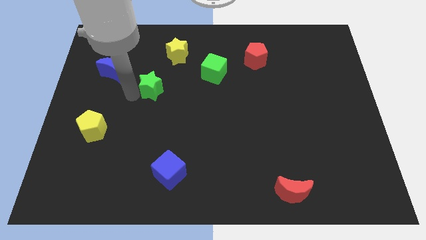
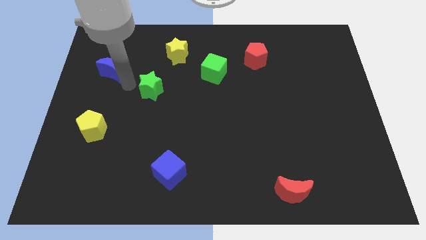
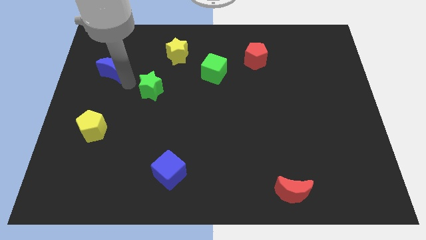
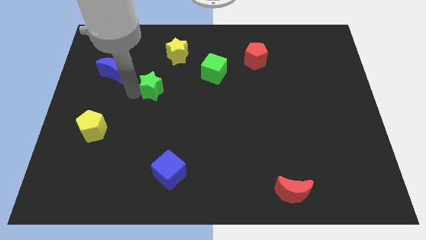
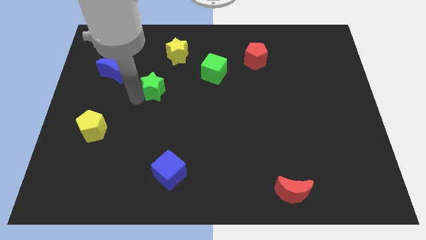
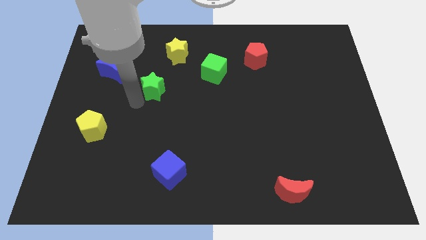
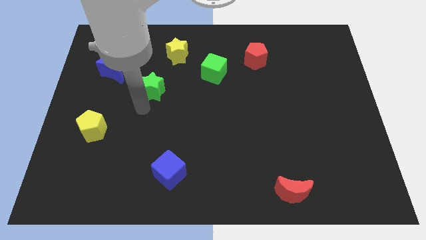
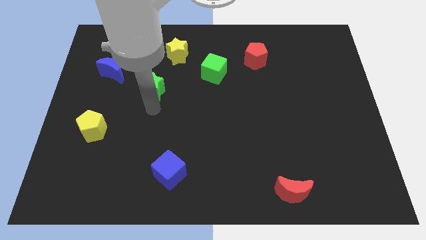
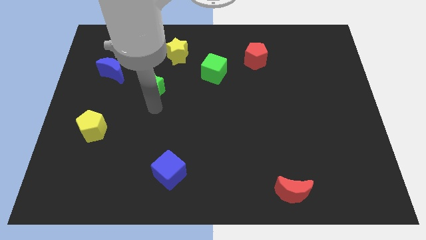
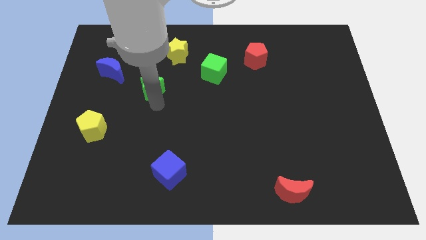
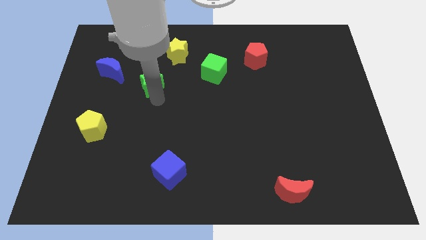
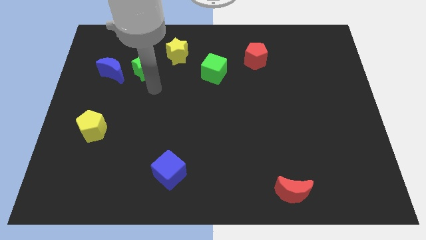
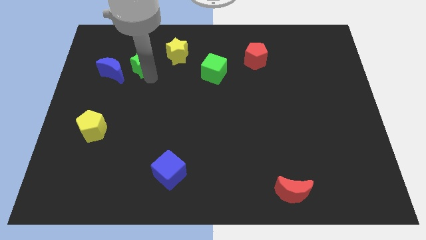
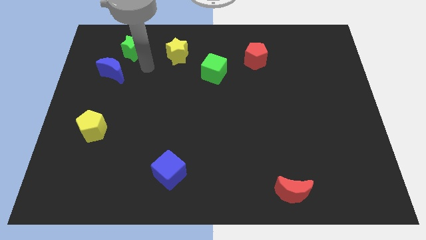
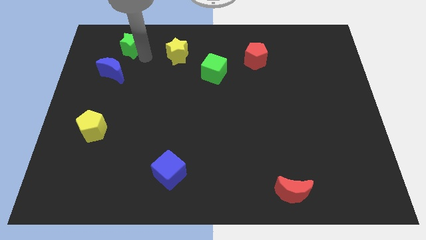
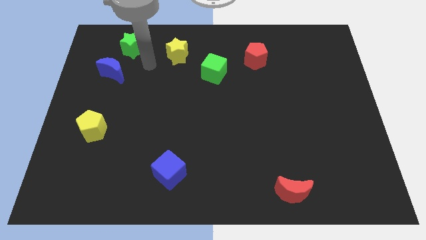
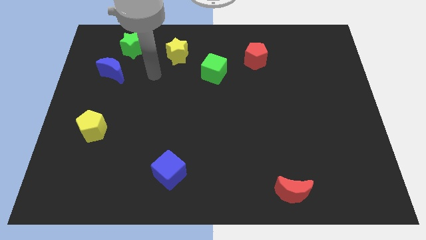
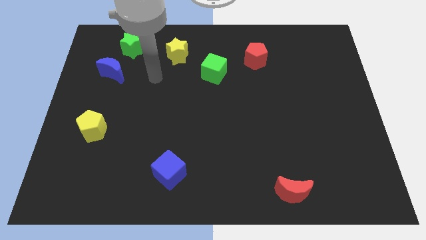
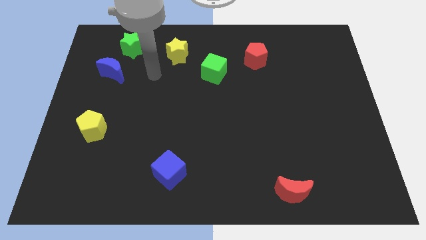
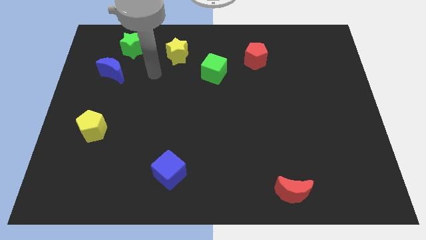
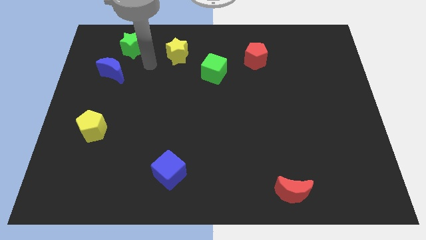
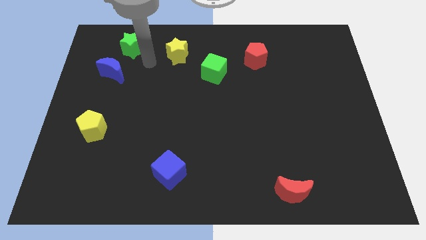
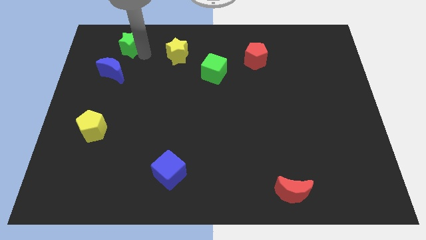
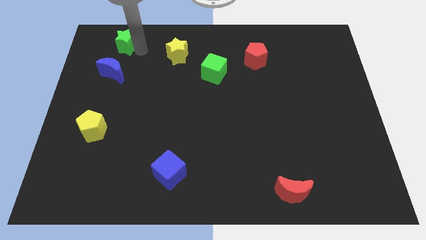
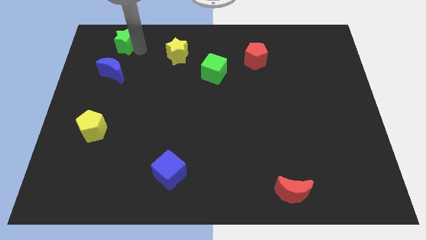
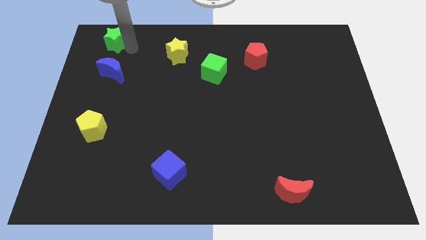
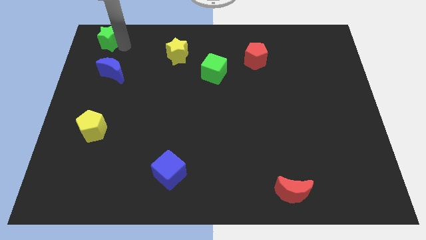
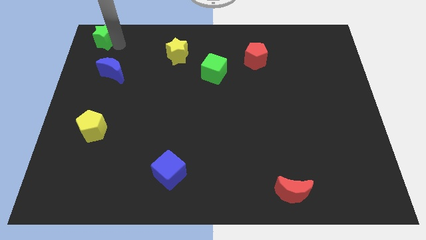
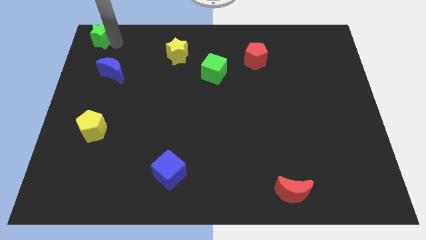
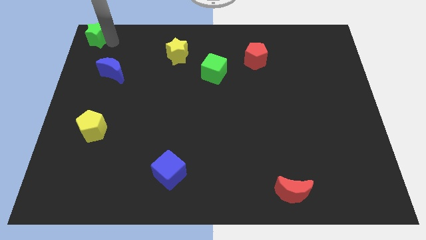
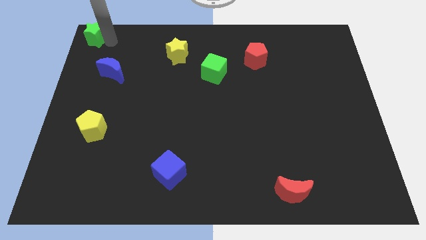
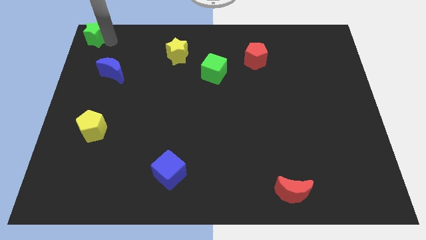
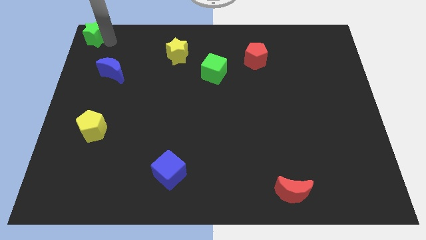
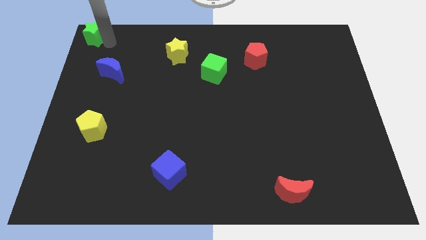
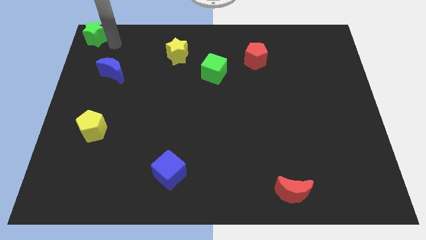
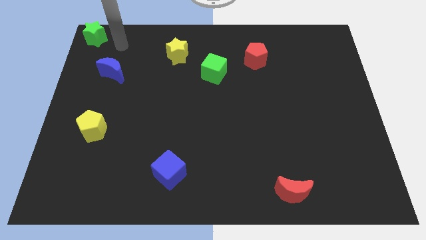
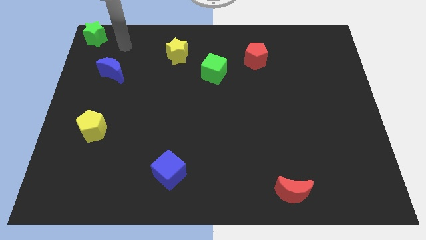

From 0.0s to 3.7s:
put the green star at the top left corner

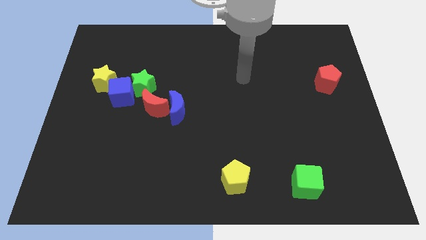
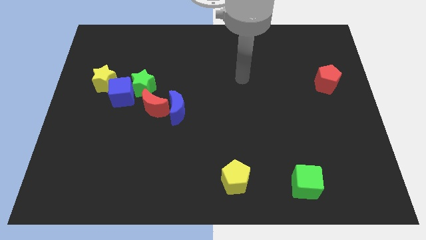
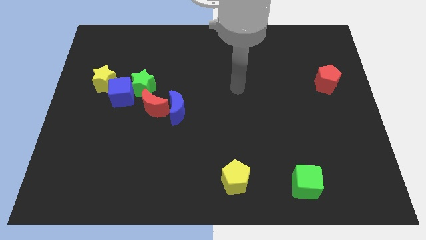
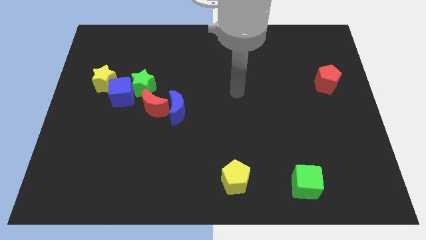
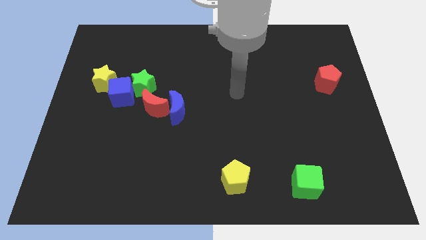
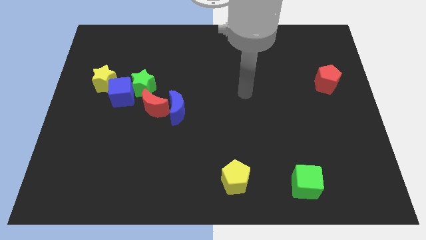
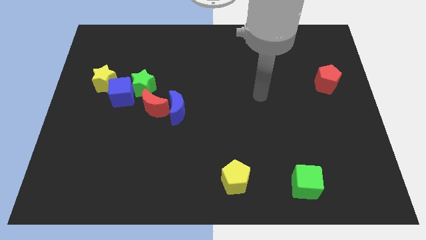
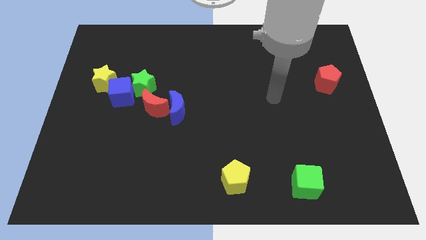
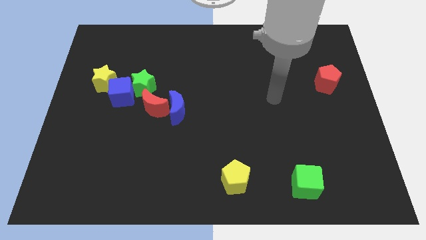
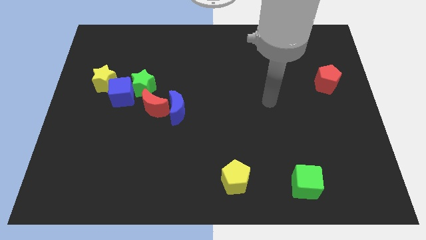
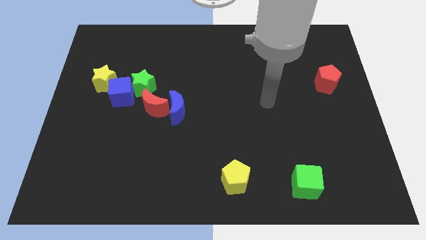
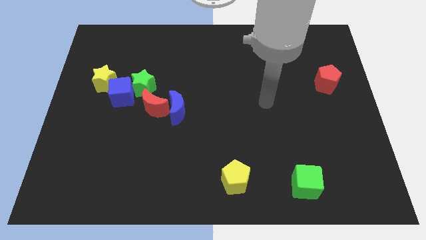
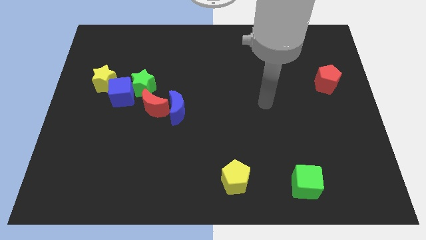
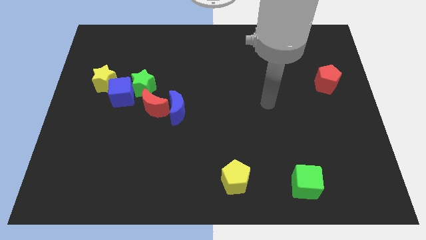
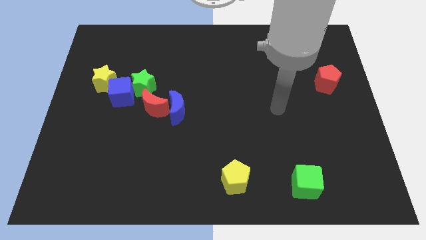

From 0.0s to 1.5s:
move your hand towards right

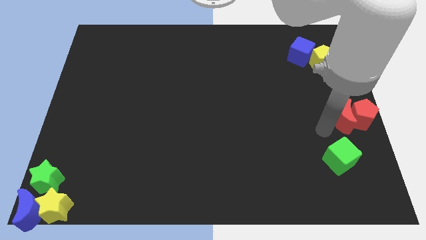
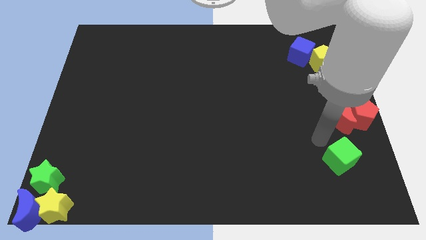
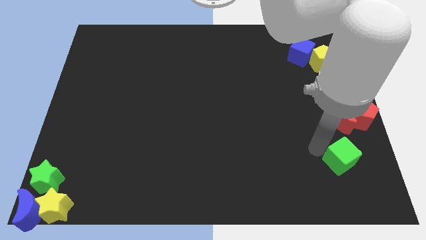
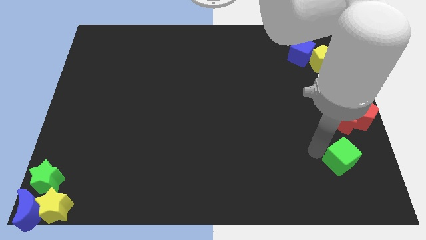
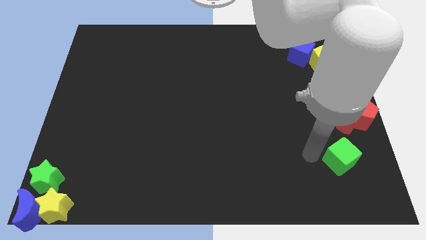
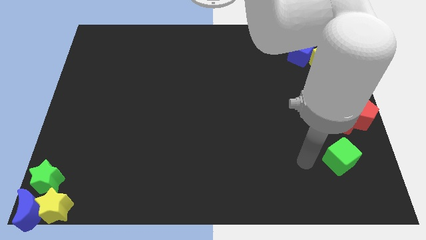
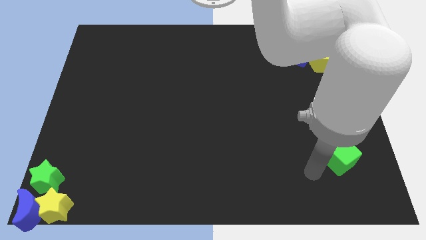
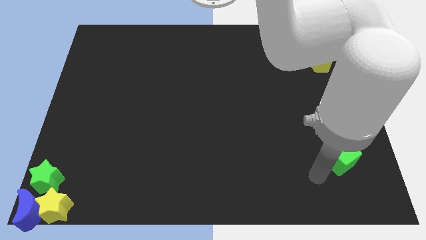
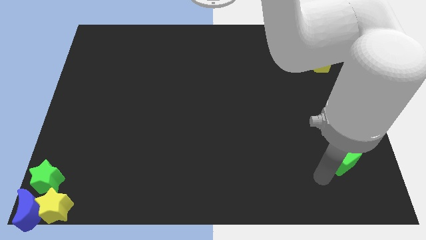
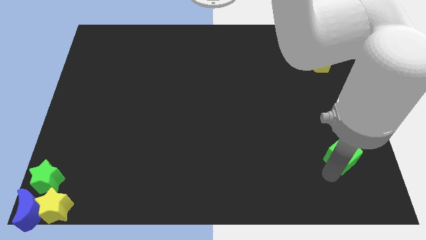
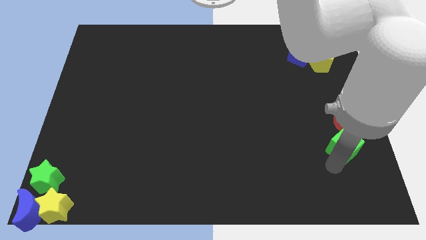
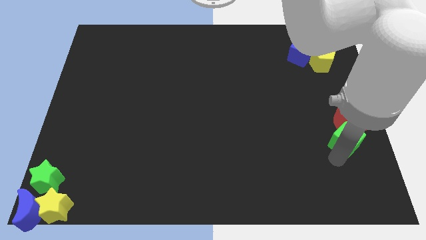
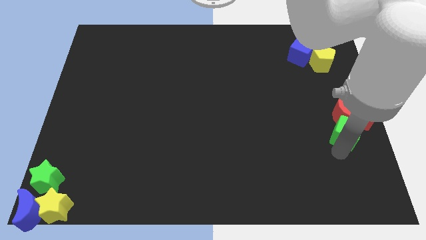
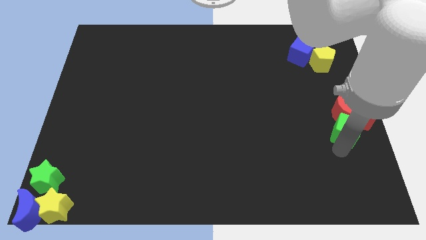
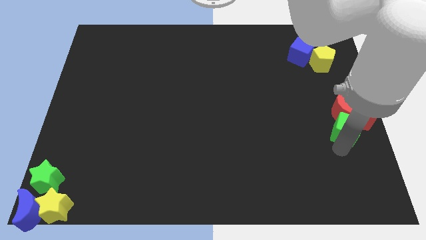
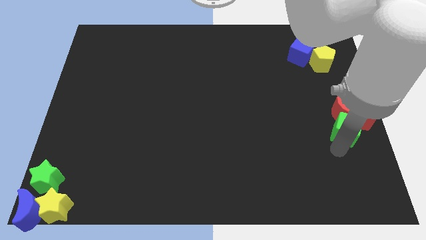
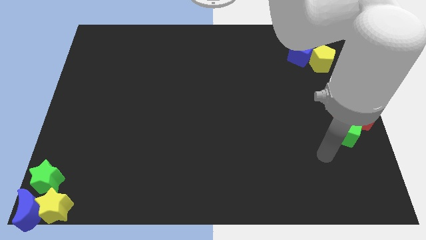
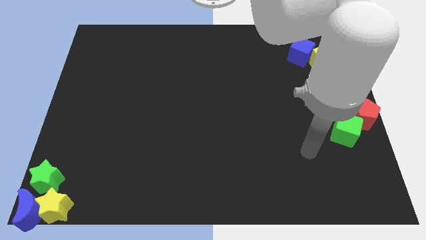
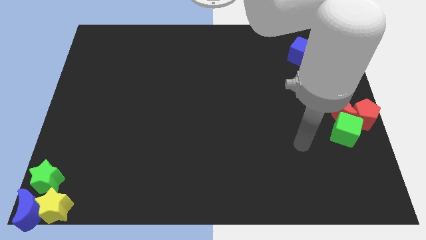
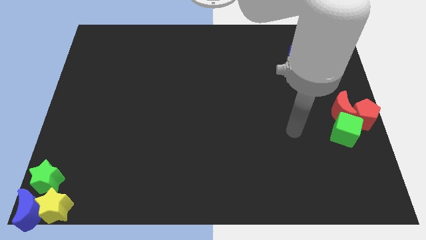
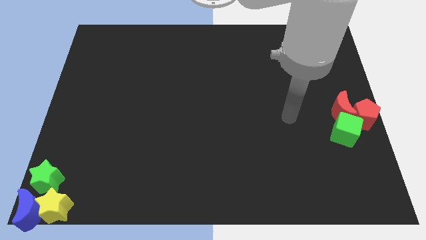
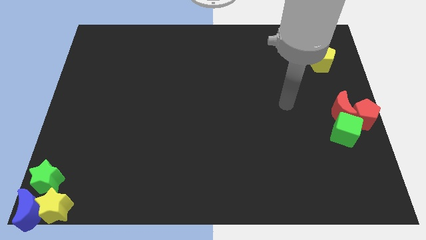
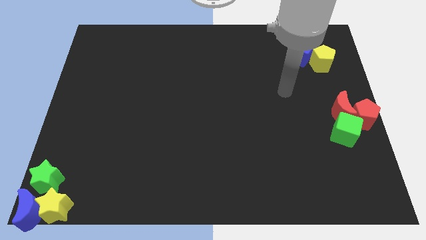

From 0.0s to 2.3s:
push green cube into the red moon

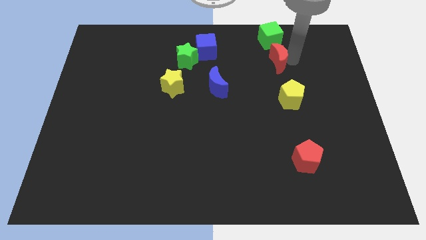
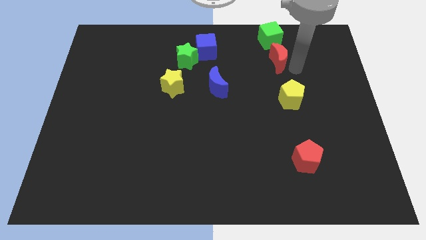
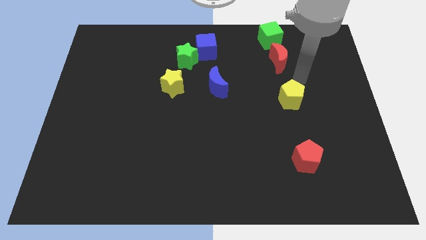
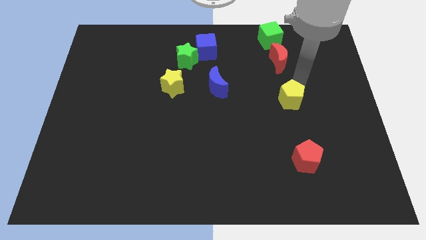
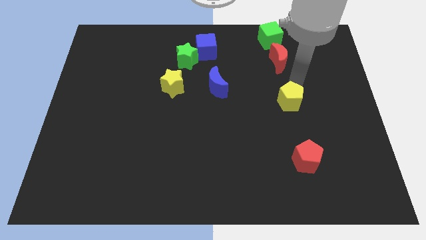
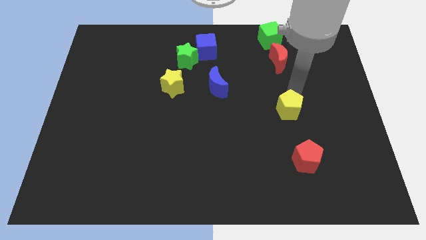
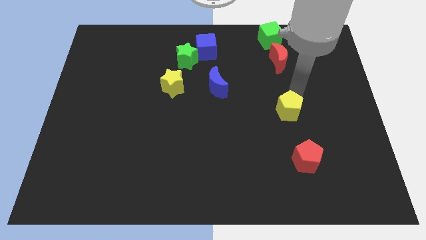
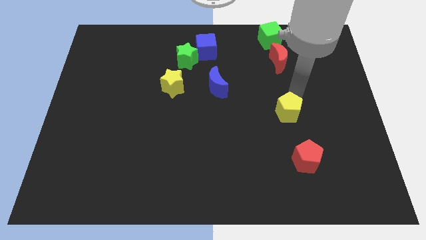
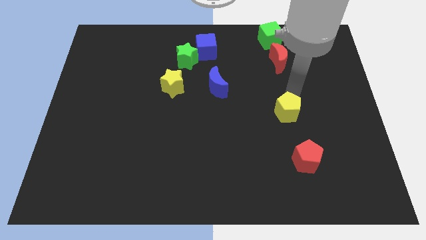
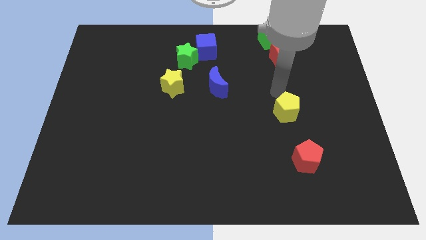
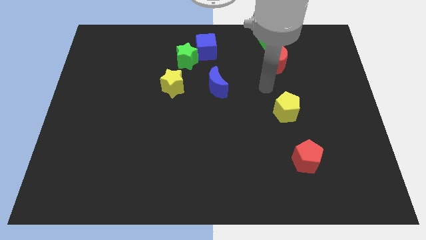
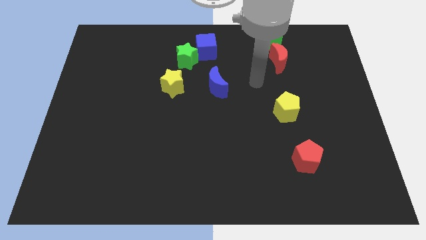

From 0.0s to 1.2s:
move the yellow pentagon slightly towards the red pentagon

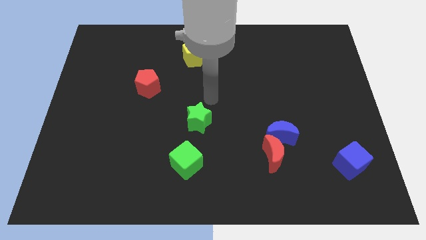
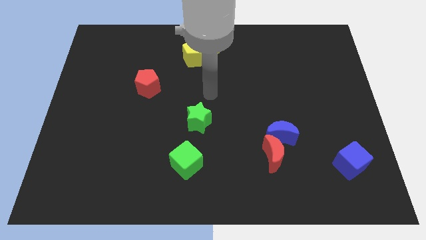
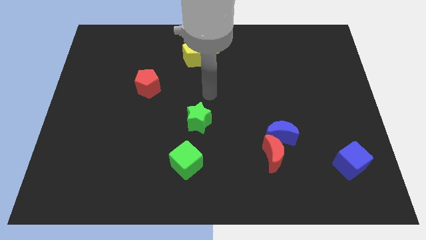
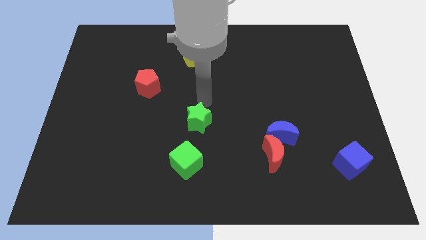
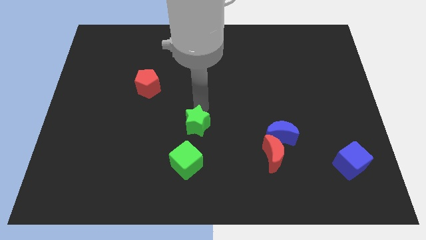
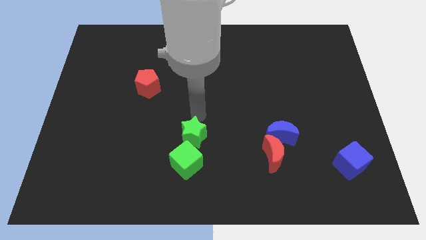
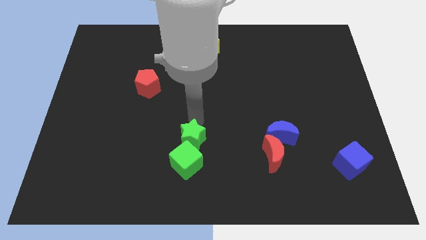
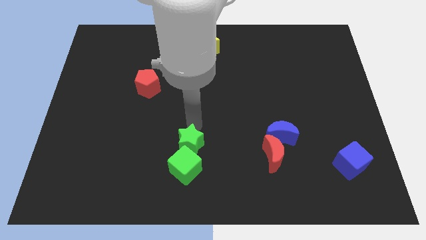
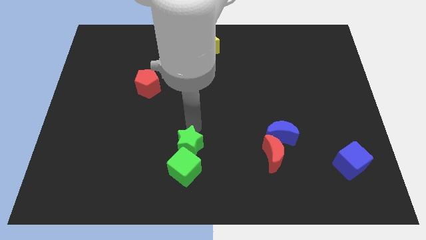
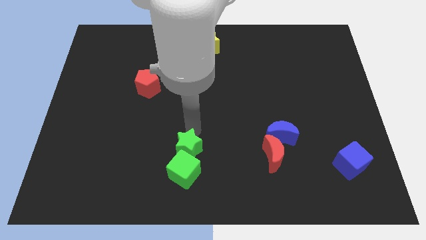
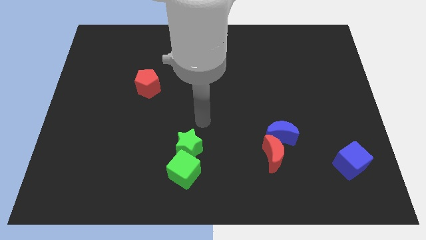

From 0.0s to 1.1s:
push green star in to green cube
